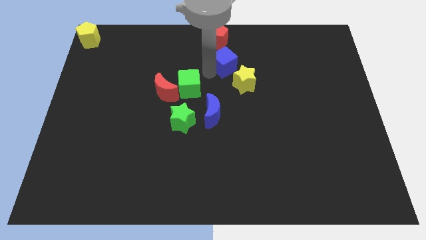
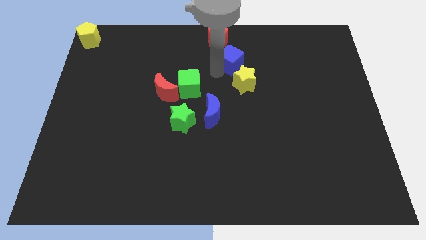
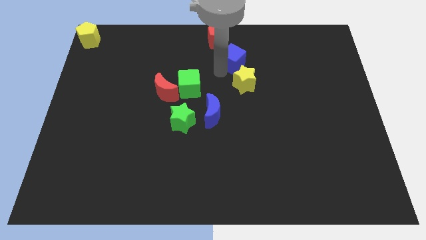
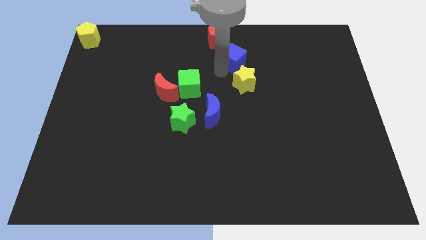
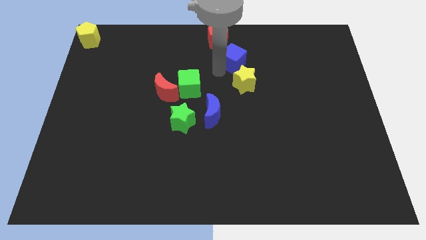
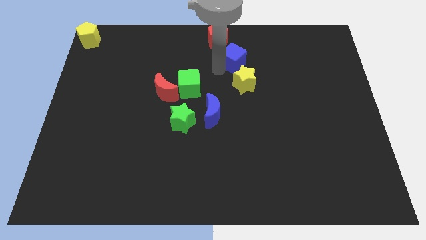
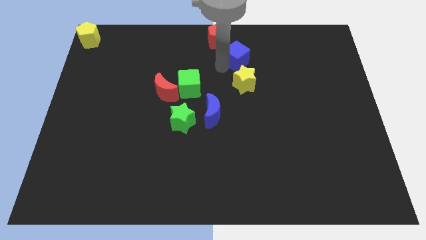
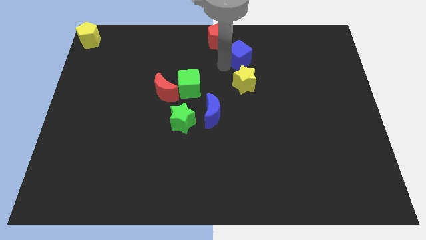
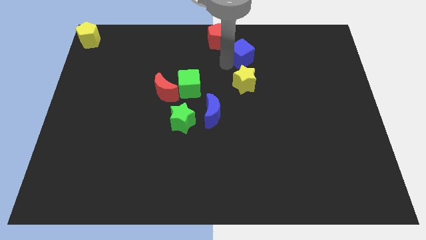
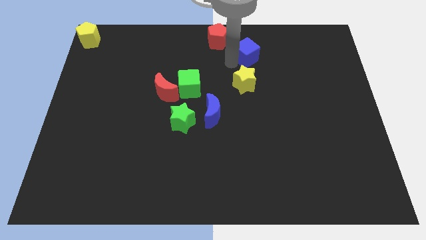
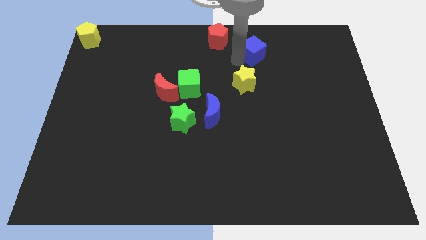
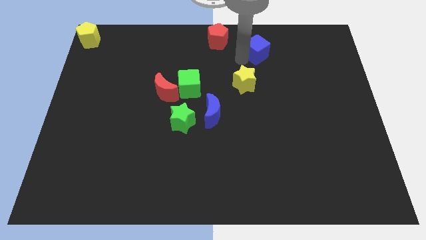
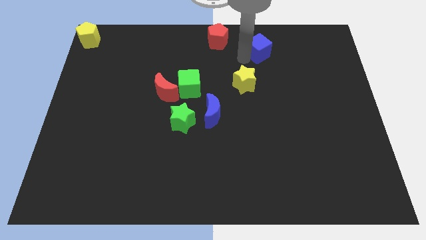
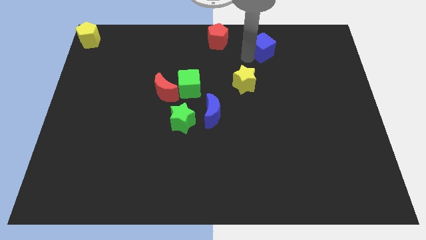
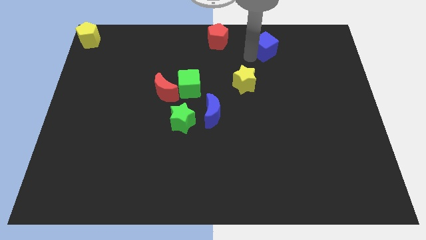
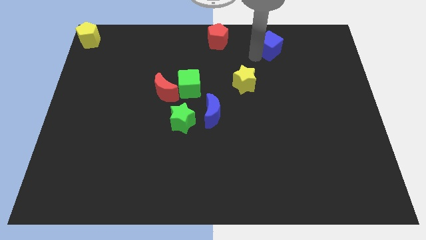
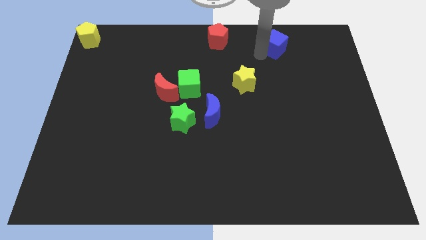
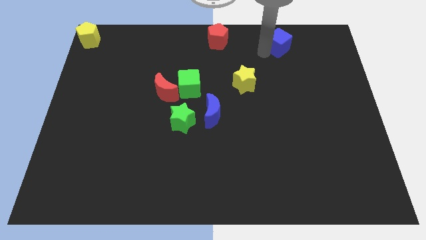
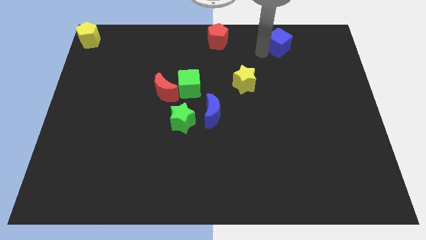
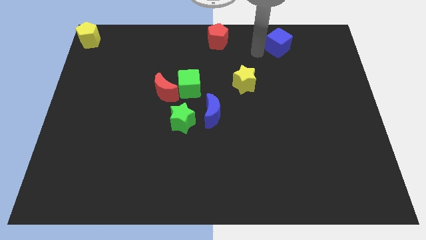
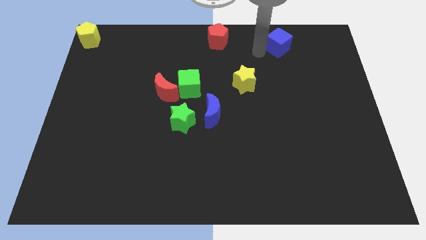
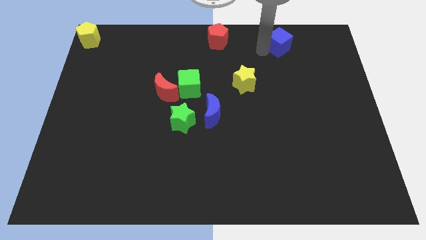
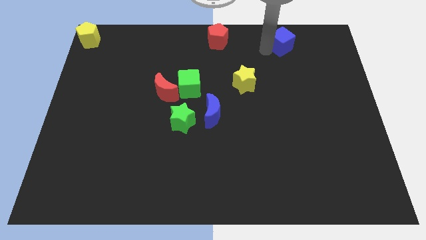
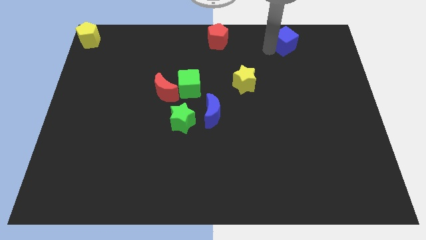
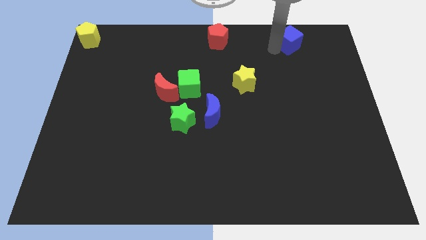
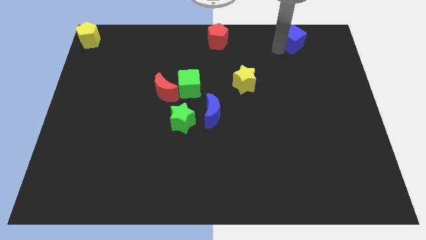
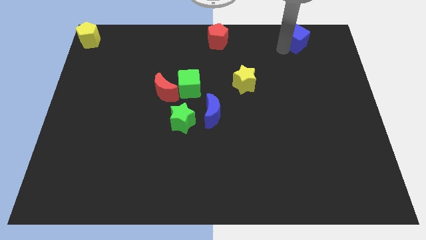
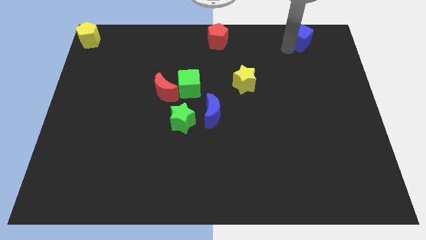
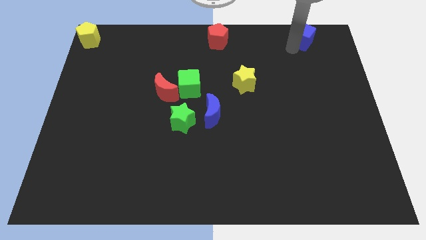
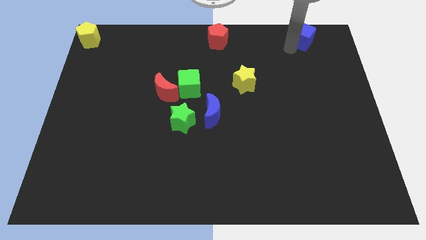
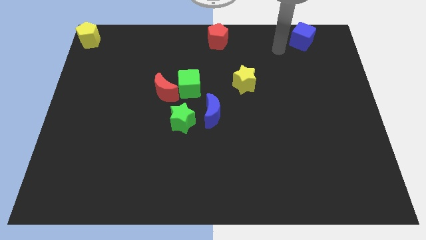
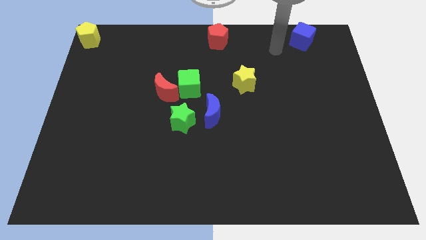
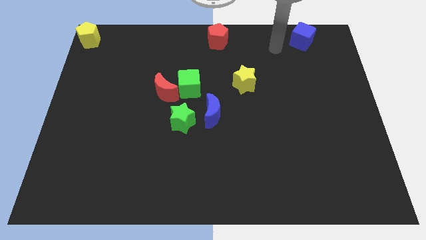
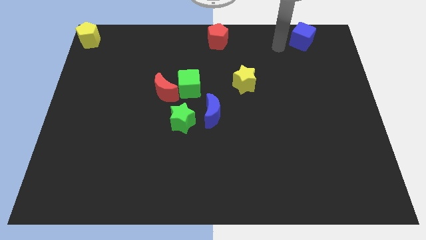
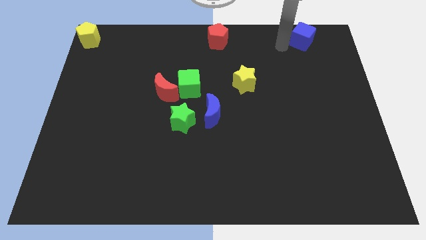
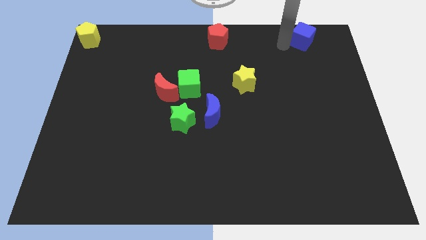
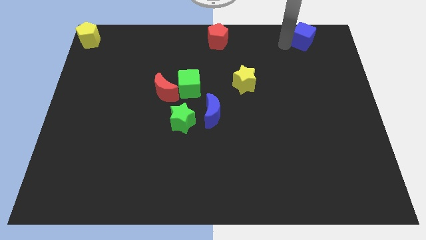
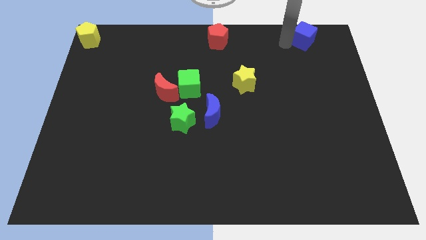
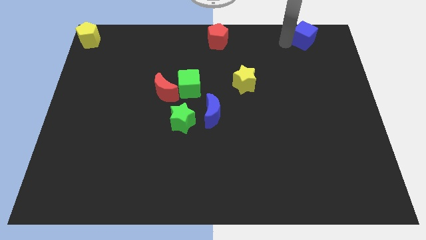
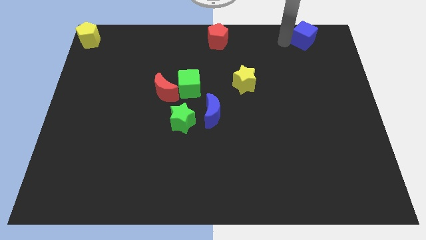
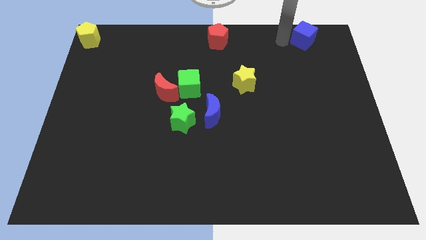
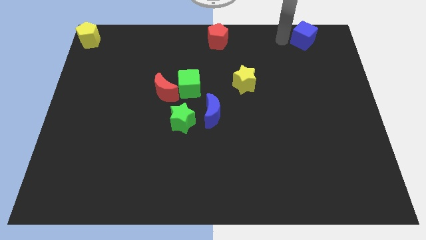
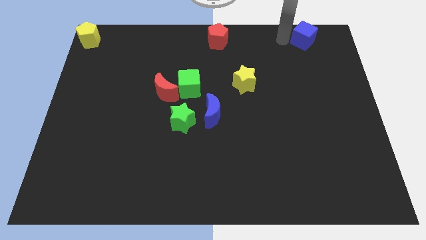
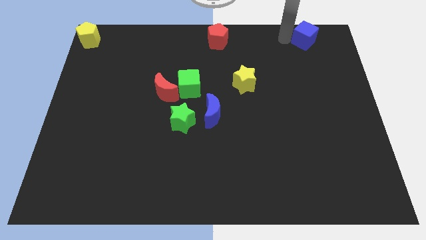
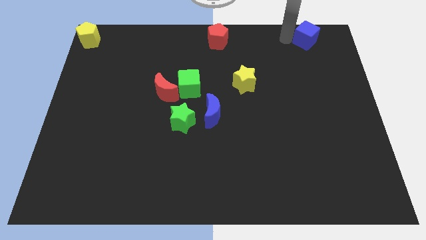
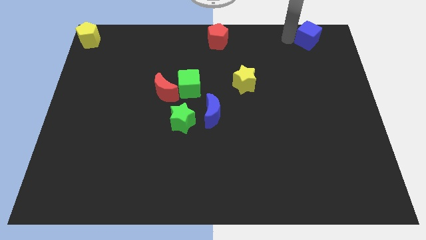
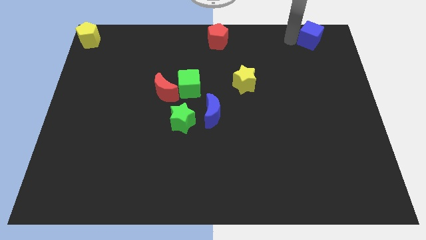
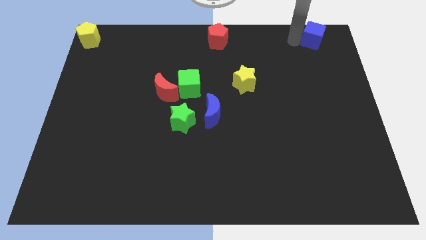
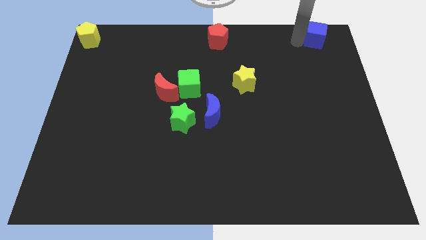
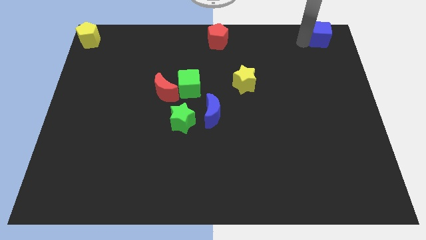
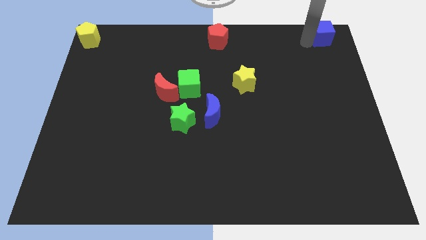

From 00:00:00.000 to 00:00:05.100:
slide blue cube towards top right

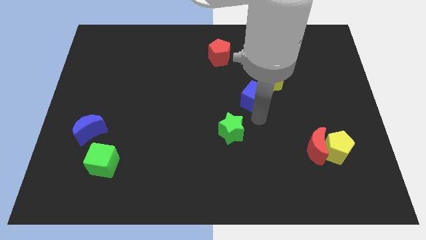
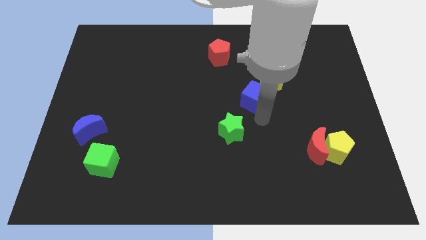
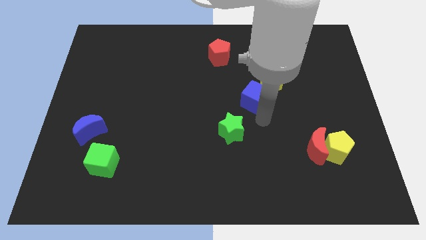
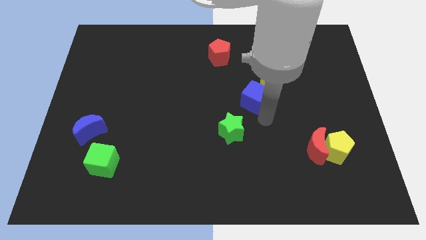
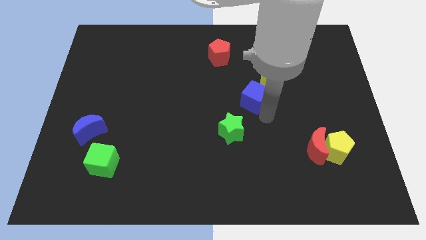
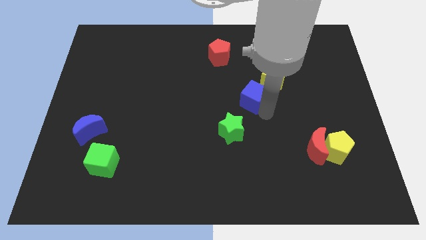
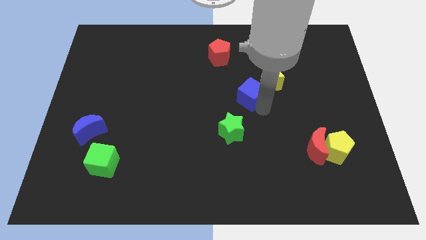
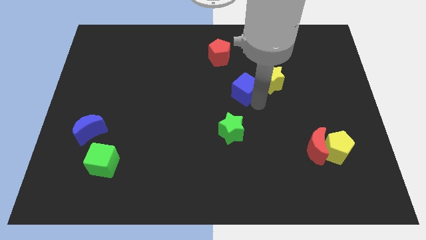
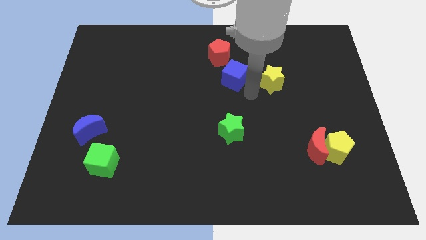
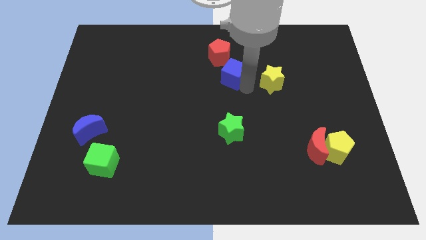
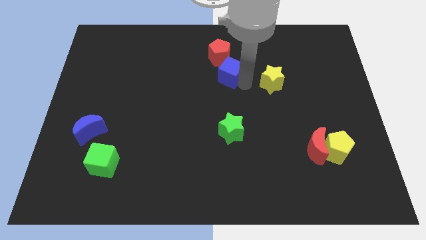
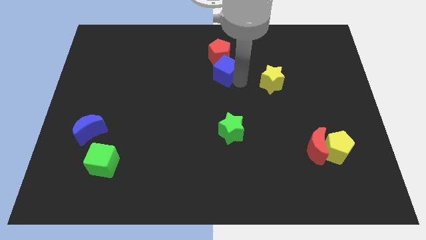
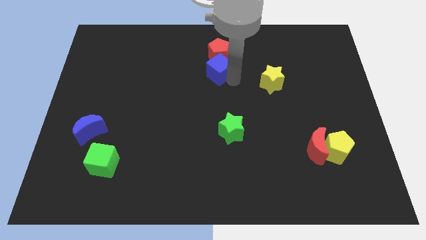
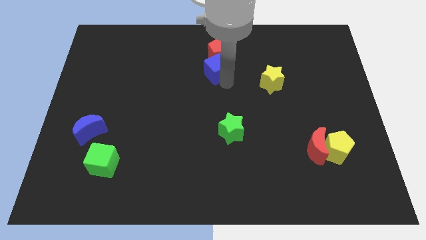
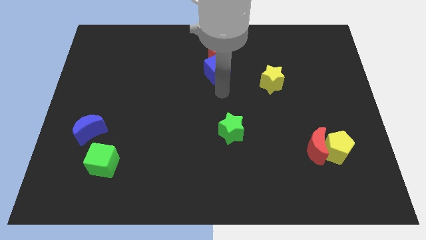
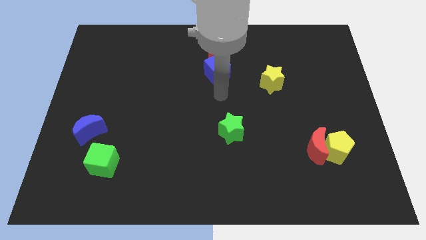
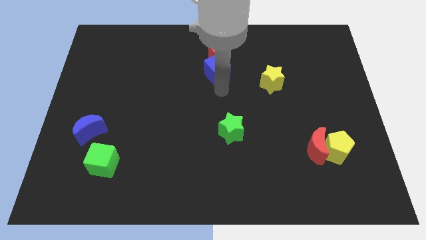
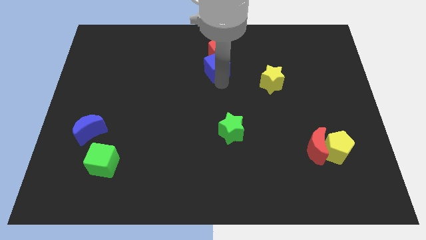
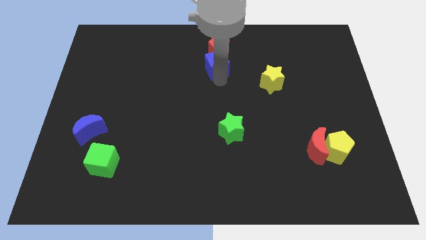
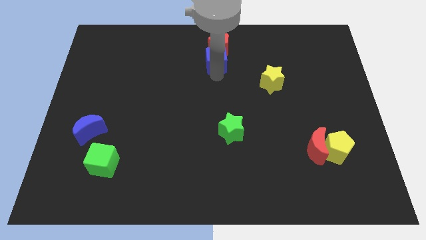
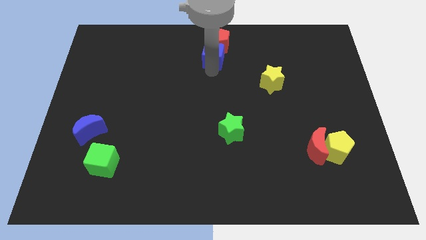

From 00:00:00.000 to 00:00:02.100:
add blue cube into red pentagon

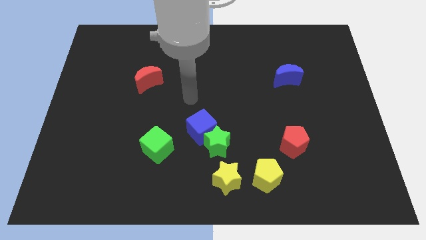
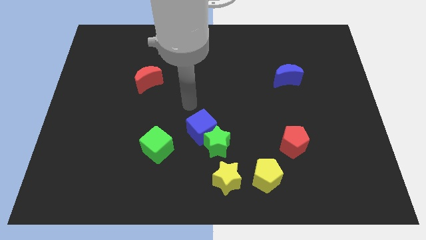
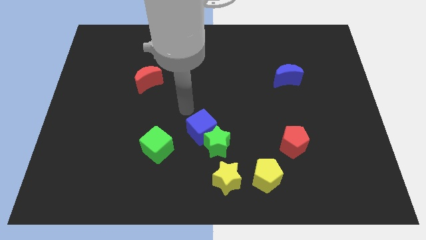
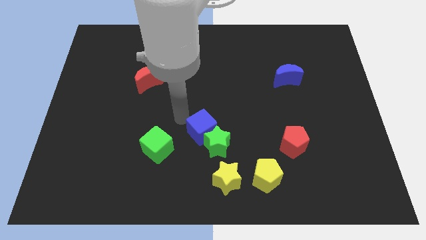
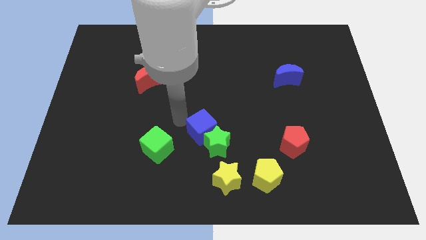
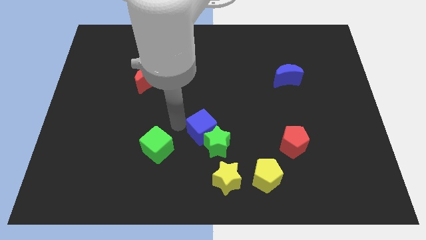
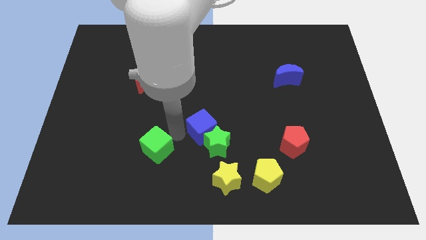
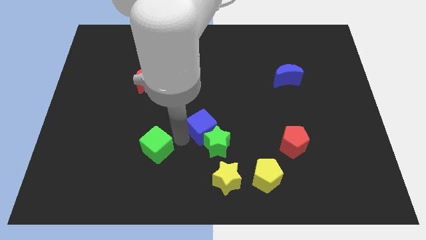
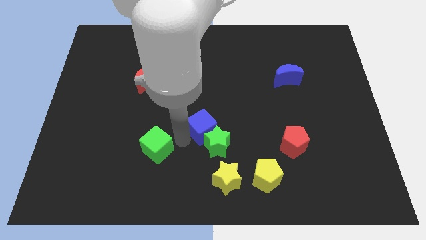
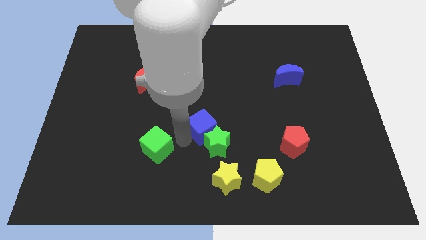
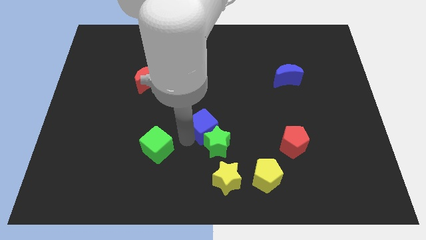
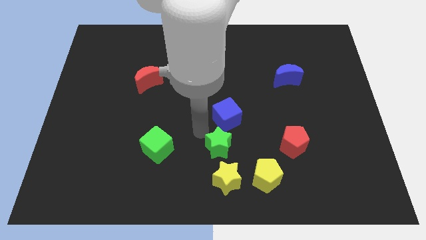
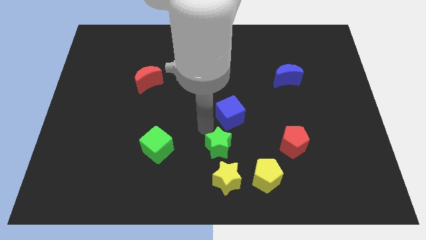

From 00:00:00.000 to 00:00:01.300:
move the blue cube right above the green star

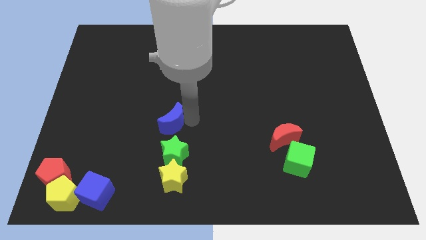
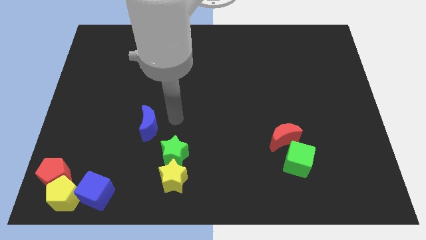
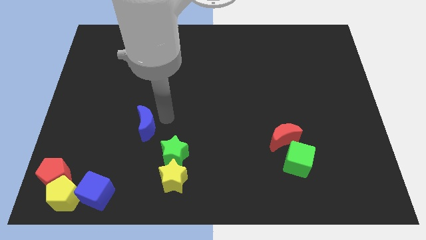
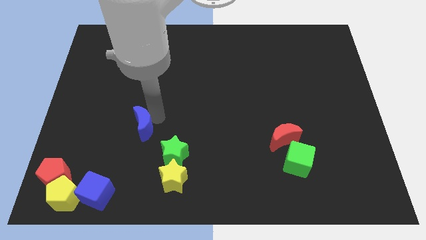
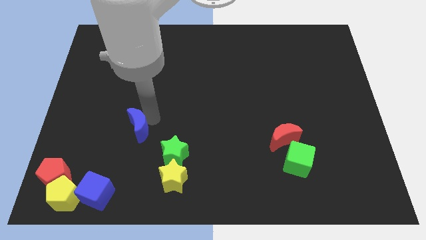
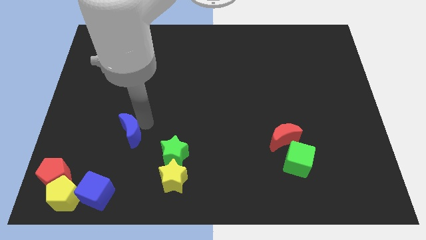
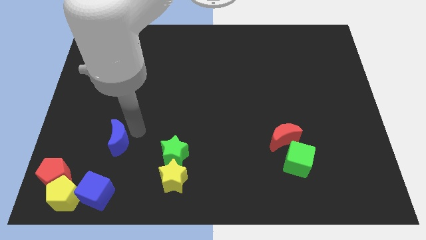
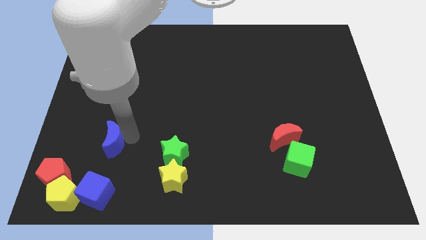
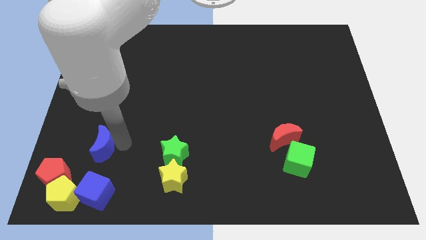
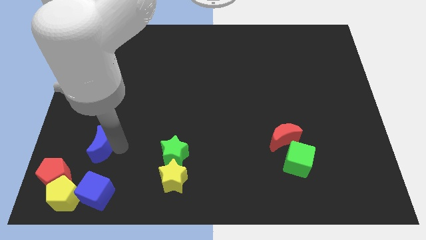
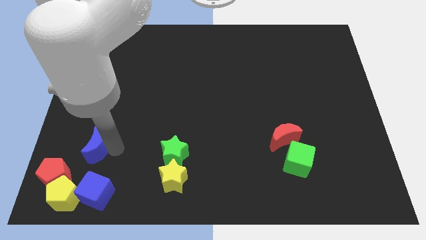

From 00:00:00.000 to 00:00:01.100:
place blue crescent above blue cube
